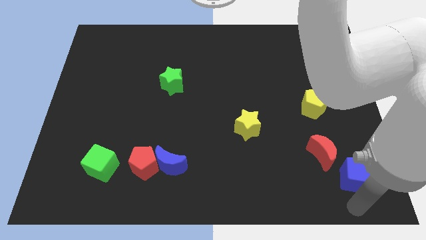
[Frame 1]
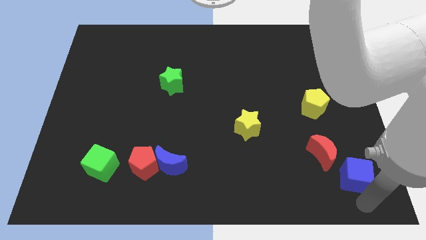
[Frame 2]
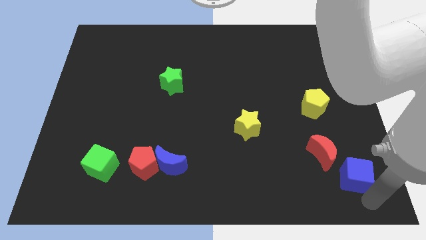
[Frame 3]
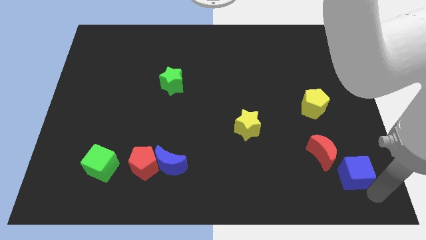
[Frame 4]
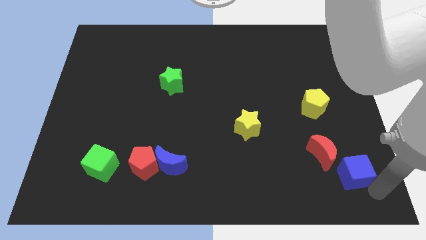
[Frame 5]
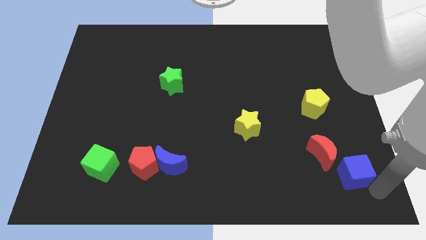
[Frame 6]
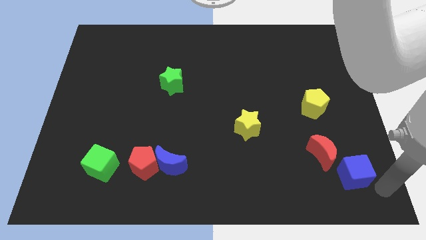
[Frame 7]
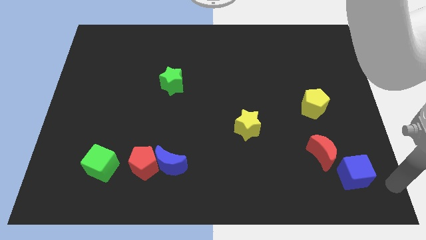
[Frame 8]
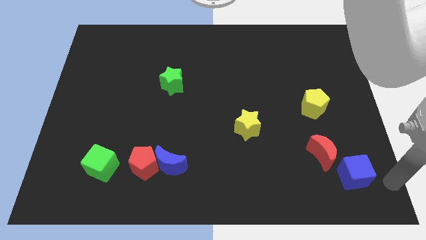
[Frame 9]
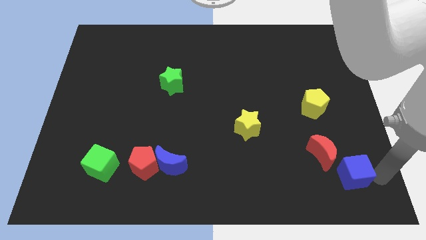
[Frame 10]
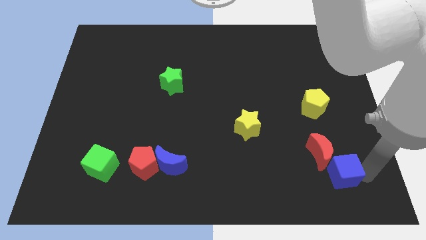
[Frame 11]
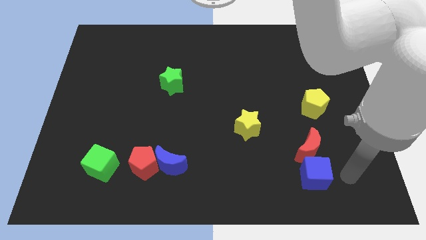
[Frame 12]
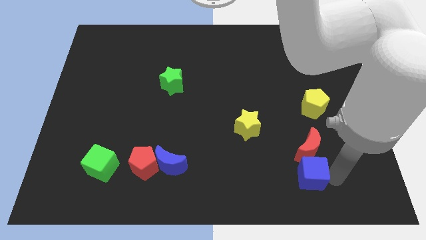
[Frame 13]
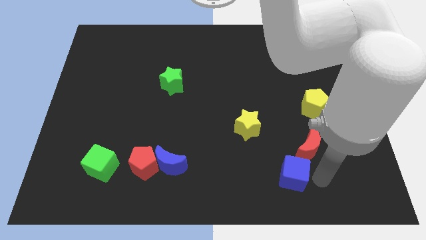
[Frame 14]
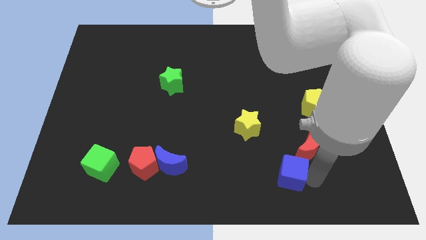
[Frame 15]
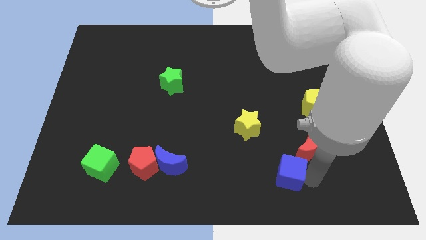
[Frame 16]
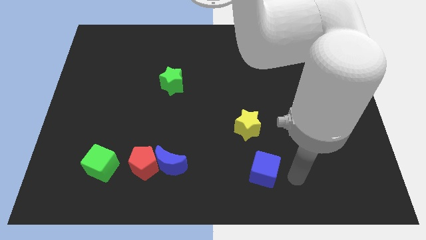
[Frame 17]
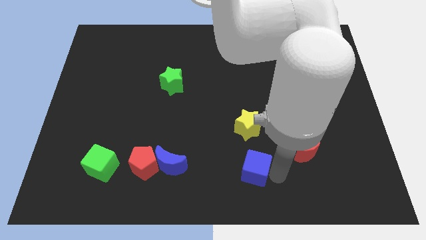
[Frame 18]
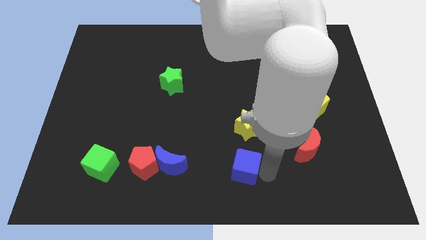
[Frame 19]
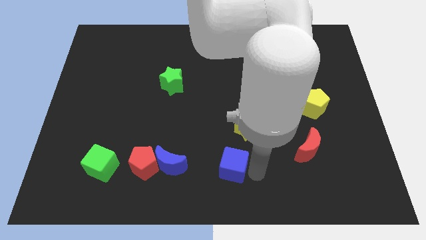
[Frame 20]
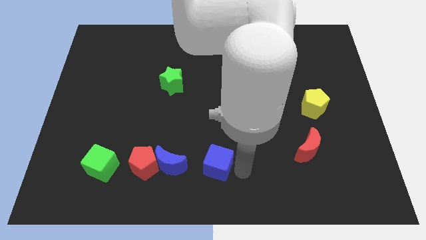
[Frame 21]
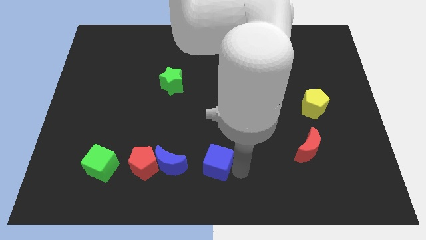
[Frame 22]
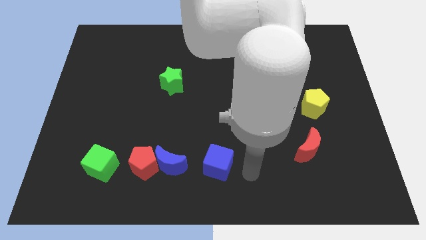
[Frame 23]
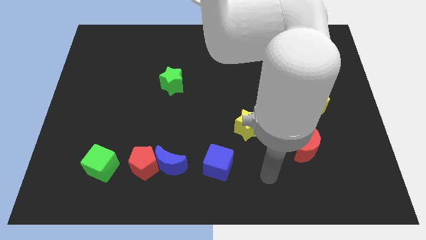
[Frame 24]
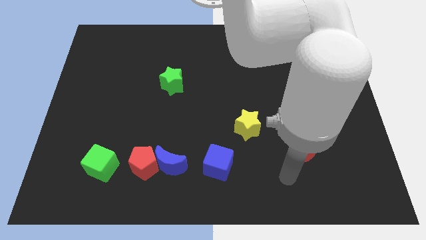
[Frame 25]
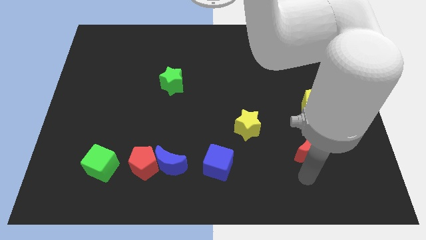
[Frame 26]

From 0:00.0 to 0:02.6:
move the blue cube to the right of the blue crescent

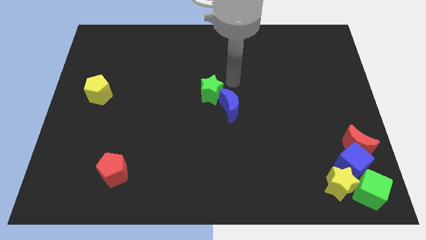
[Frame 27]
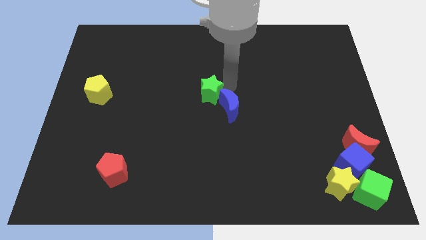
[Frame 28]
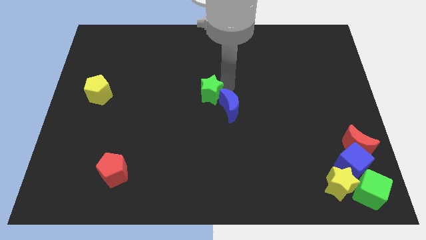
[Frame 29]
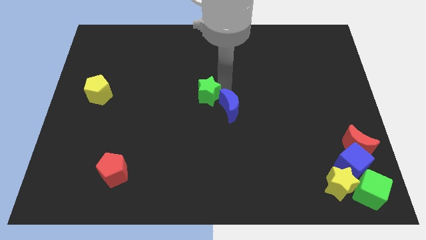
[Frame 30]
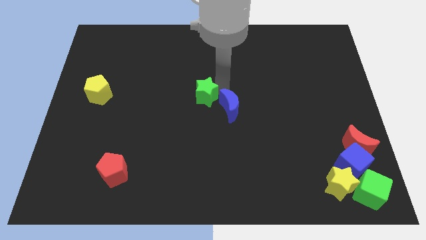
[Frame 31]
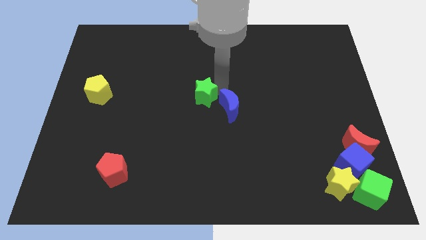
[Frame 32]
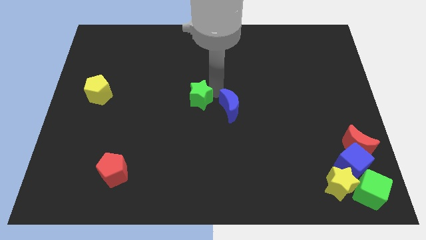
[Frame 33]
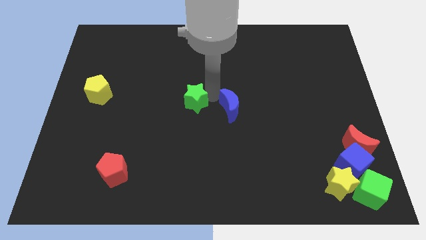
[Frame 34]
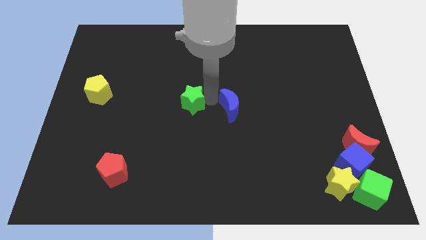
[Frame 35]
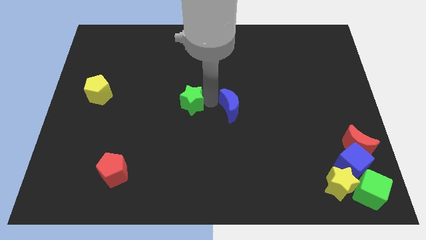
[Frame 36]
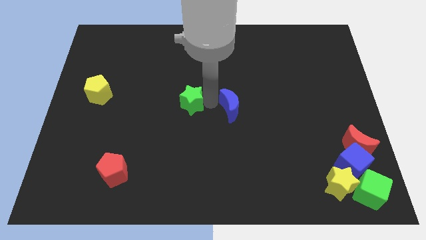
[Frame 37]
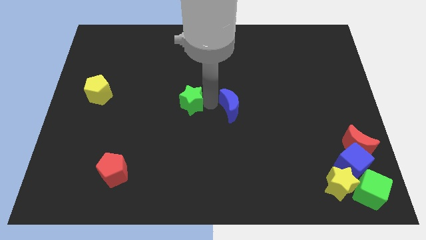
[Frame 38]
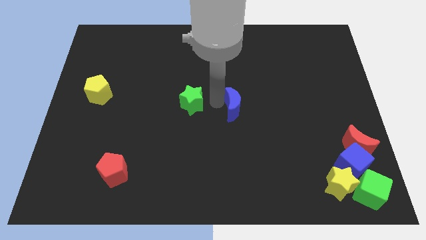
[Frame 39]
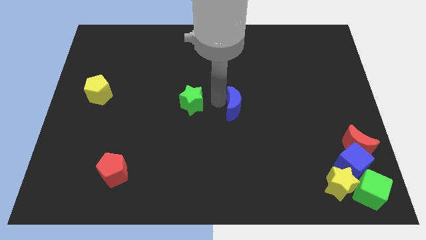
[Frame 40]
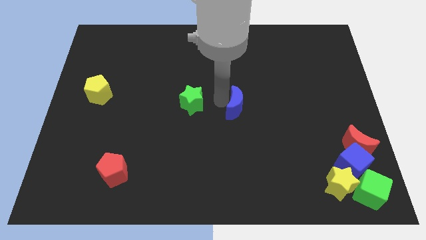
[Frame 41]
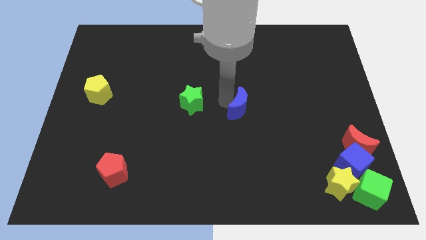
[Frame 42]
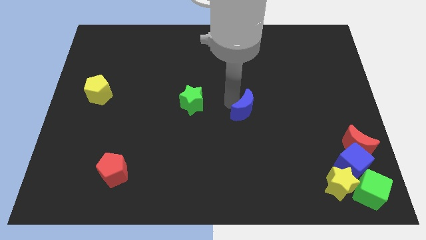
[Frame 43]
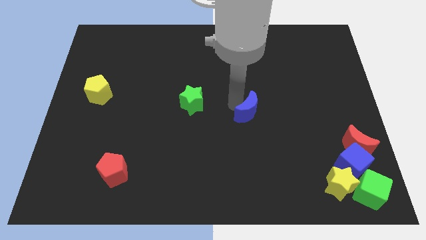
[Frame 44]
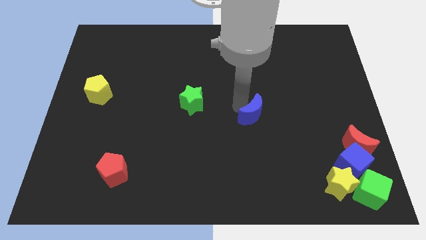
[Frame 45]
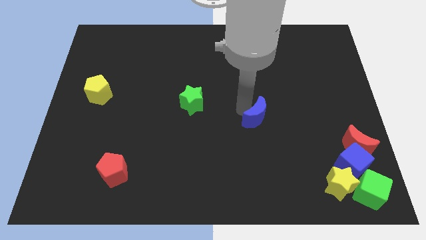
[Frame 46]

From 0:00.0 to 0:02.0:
separate the green star and blue crescent from each other

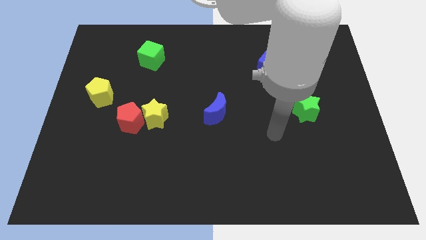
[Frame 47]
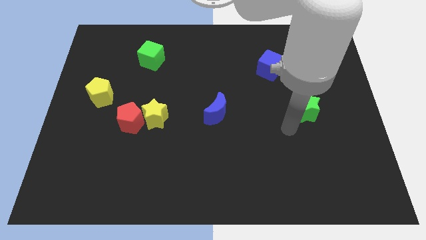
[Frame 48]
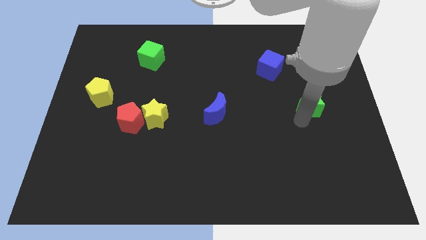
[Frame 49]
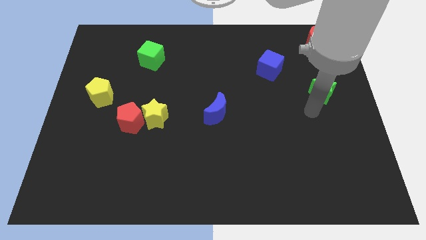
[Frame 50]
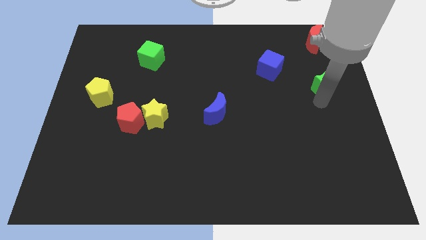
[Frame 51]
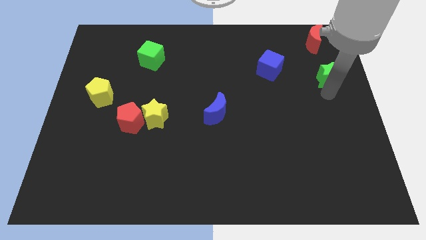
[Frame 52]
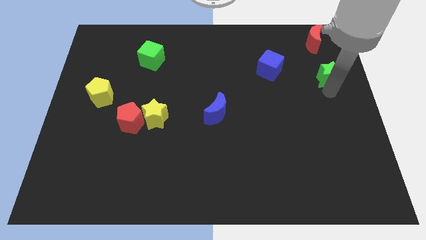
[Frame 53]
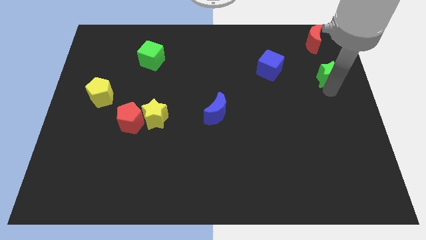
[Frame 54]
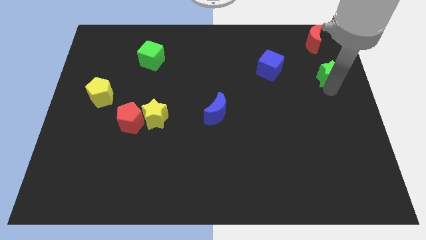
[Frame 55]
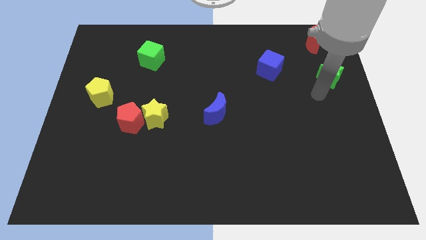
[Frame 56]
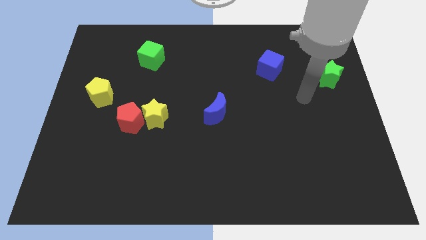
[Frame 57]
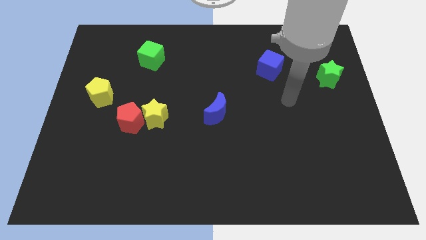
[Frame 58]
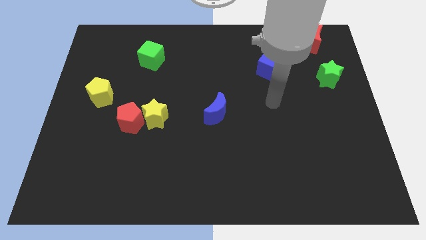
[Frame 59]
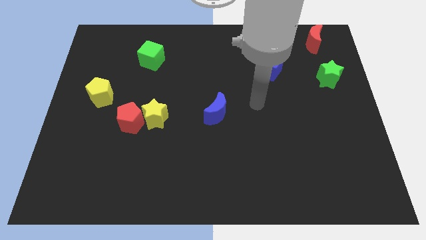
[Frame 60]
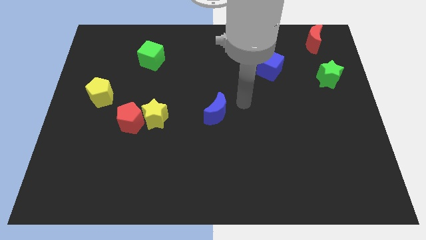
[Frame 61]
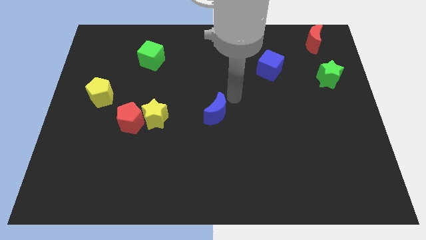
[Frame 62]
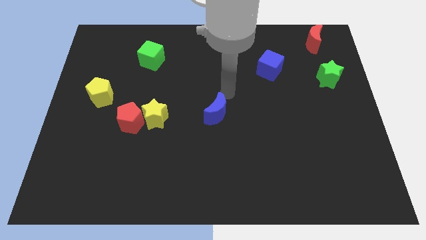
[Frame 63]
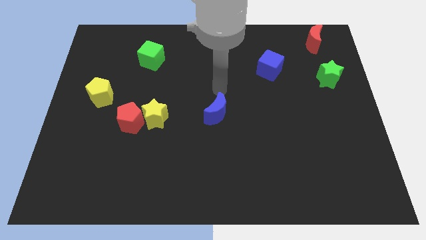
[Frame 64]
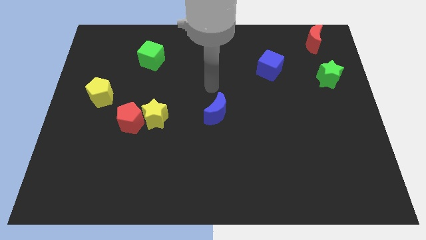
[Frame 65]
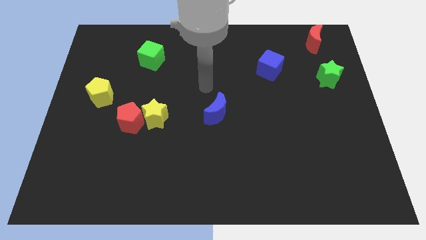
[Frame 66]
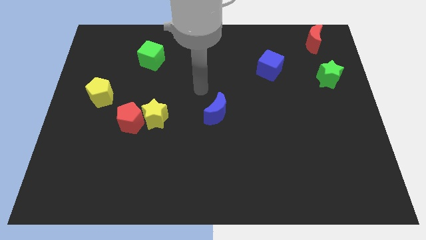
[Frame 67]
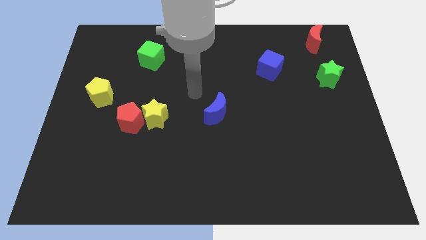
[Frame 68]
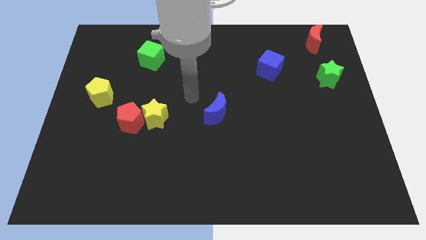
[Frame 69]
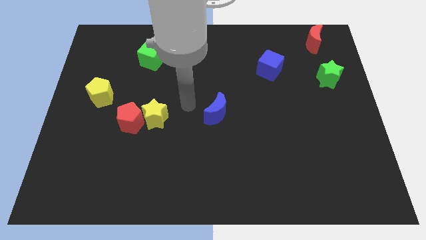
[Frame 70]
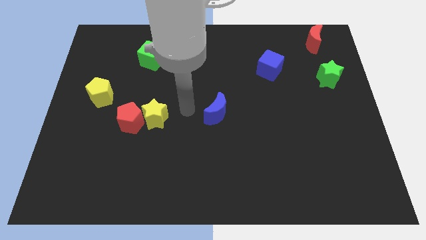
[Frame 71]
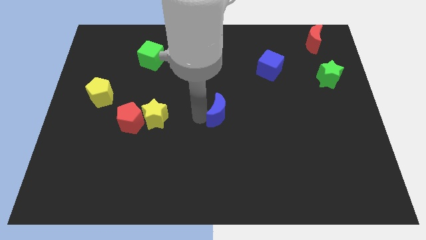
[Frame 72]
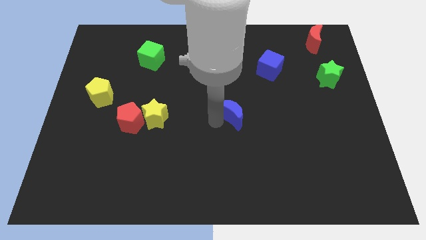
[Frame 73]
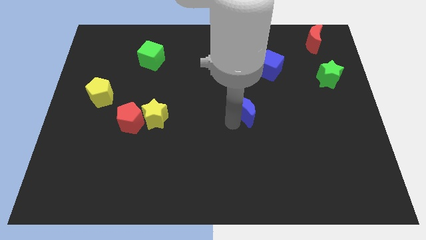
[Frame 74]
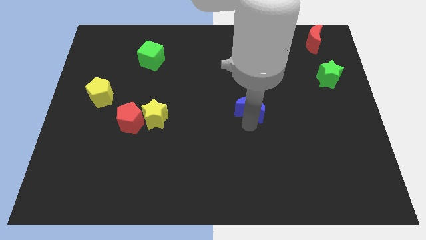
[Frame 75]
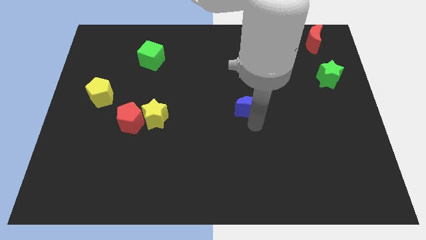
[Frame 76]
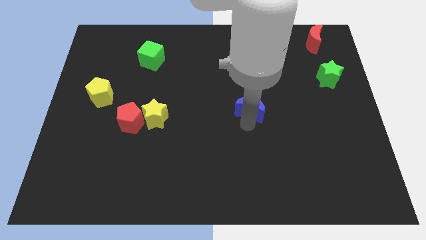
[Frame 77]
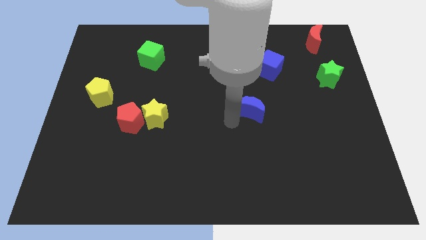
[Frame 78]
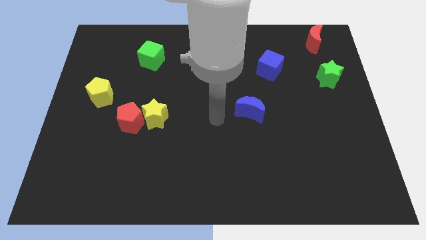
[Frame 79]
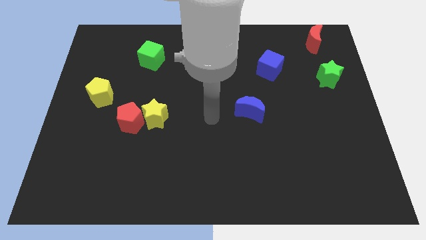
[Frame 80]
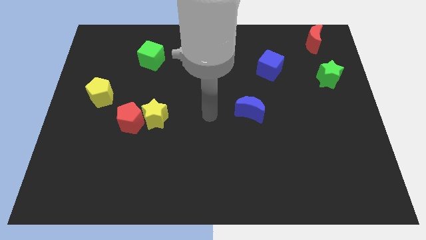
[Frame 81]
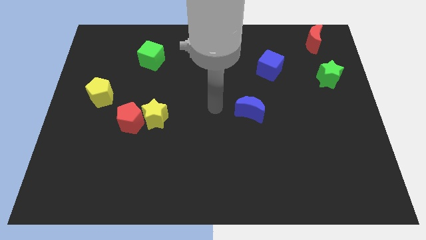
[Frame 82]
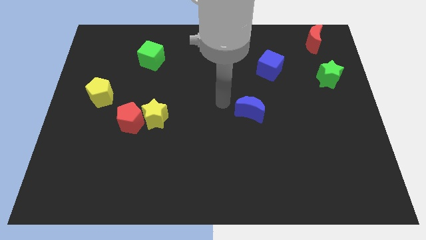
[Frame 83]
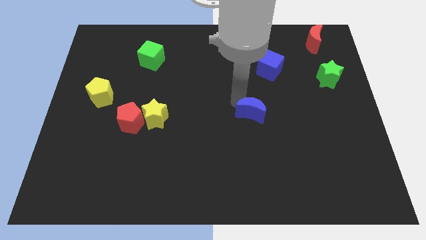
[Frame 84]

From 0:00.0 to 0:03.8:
move the blue moon from the center side

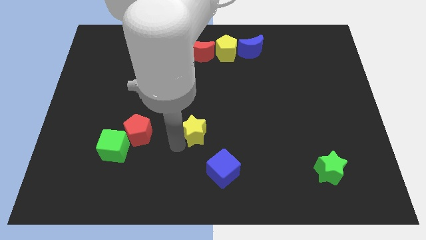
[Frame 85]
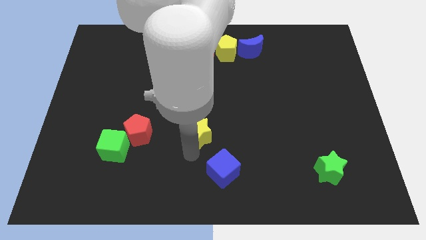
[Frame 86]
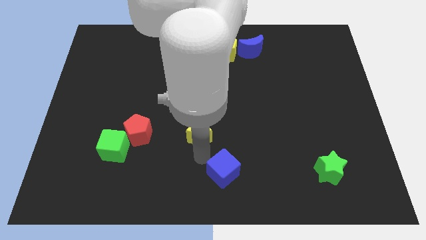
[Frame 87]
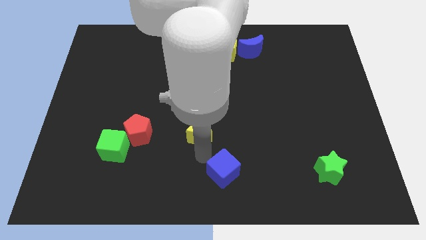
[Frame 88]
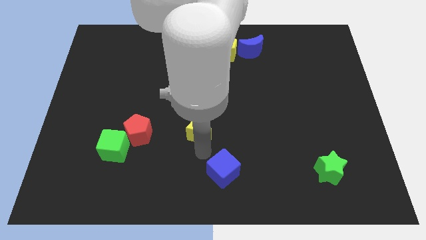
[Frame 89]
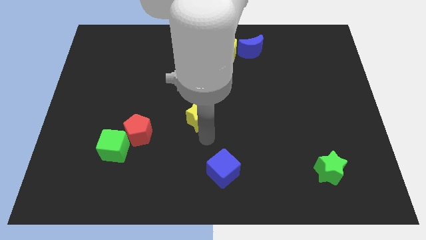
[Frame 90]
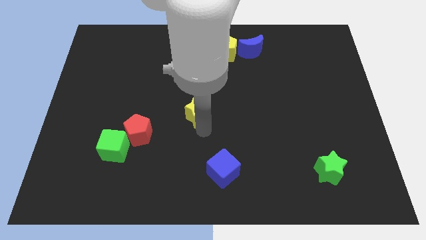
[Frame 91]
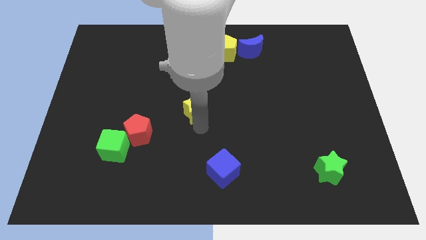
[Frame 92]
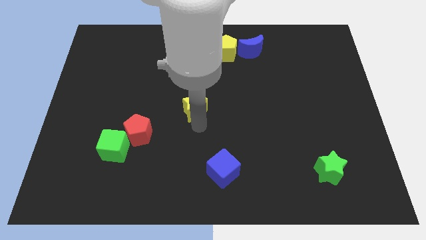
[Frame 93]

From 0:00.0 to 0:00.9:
move the yellow star slightly up
